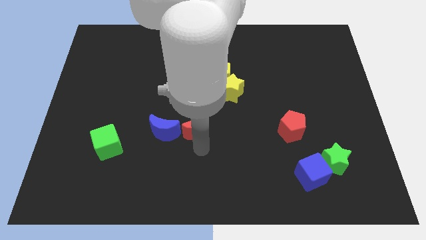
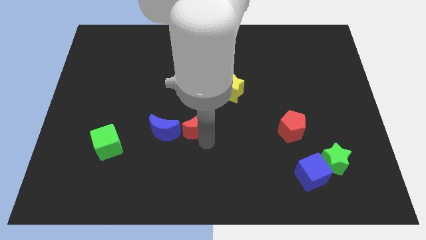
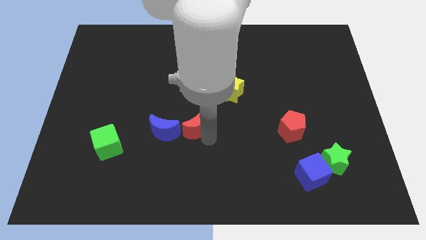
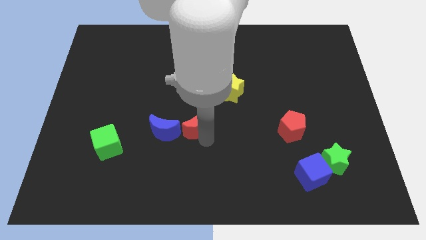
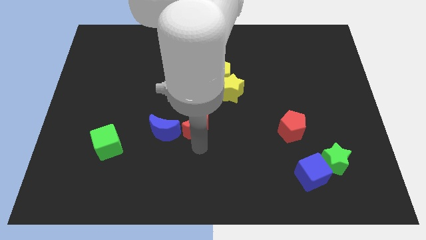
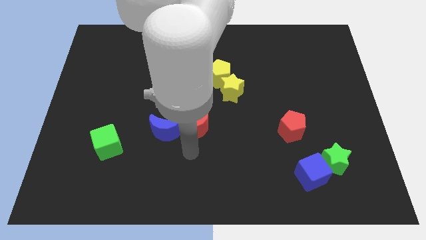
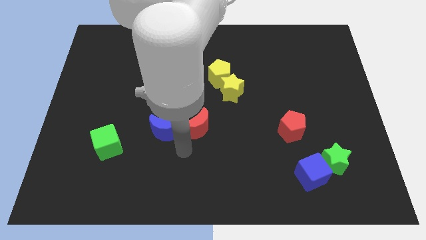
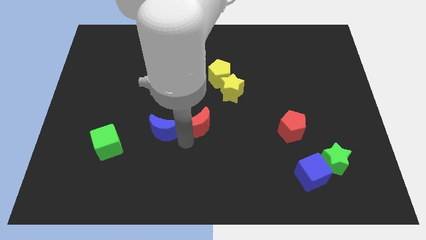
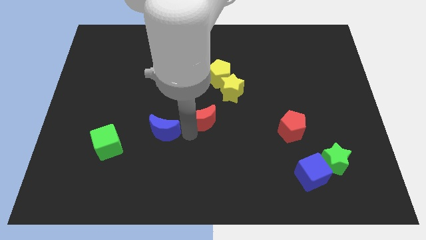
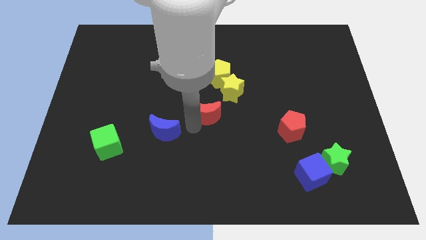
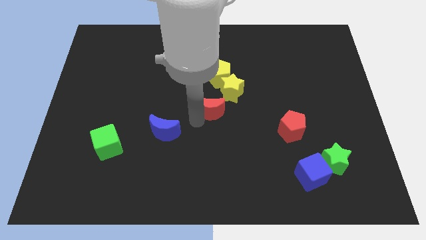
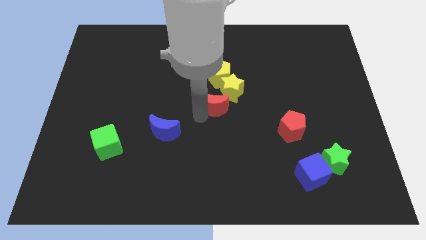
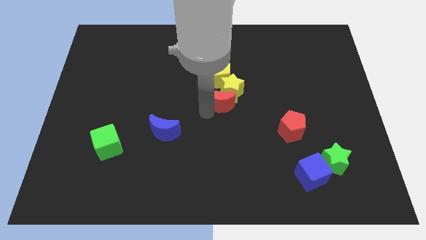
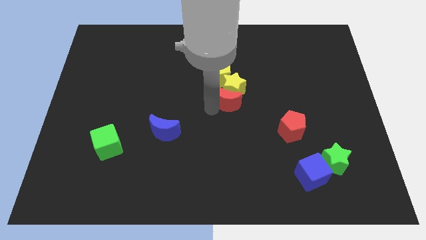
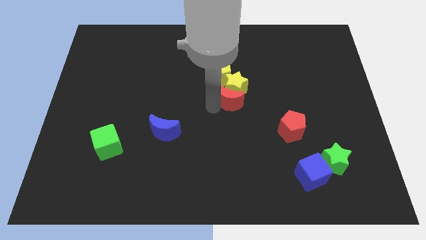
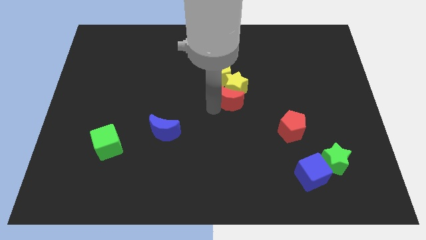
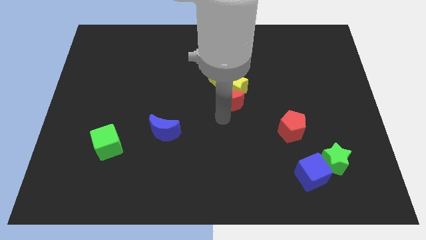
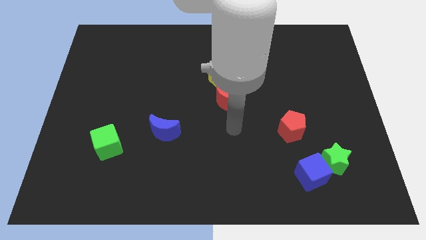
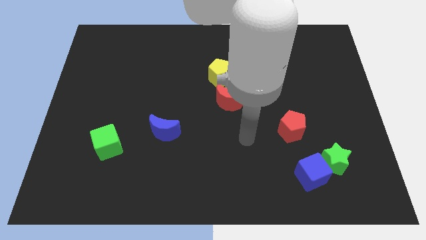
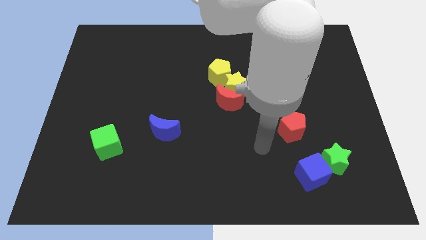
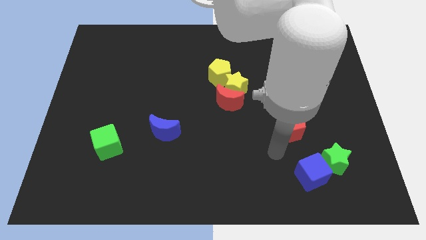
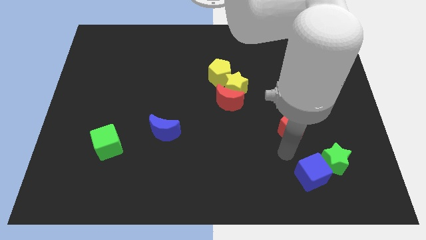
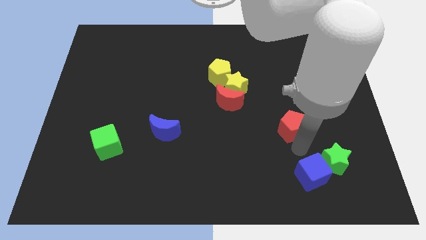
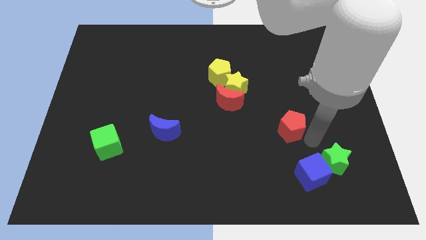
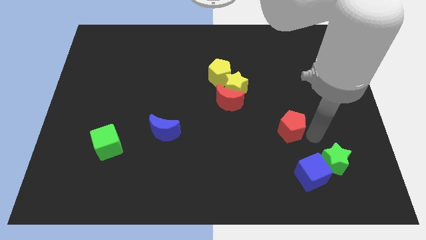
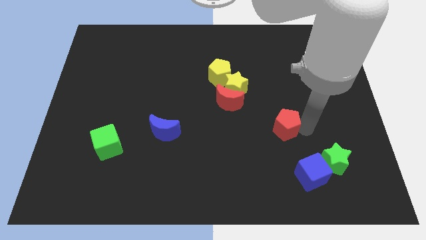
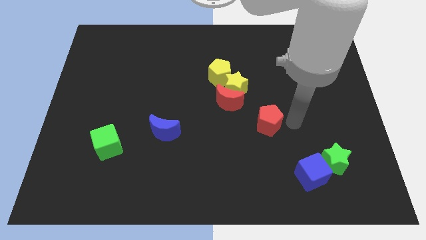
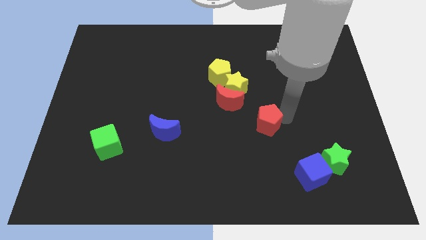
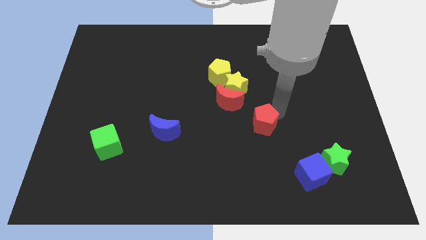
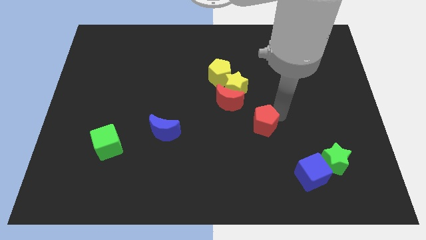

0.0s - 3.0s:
separate blue moon and red moon

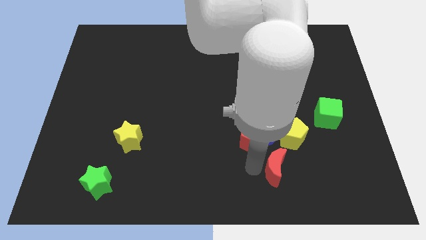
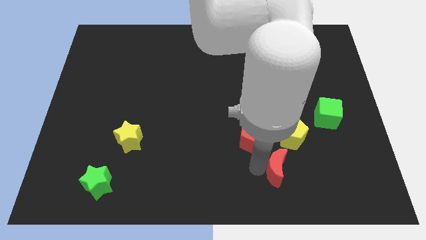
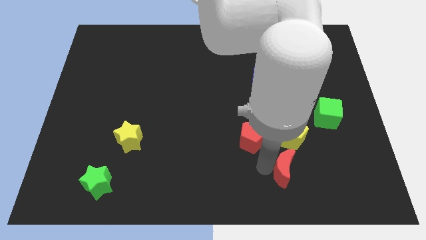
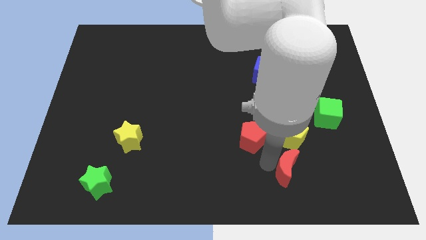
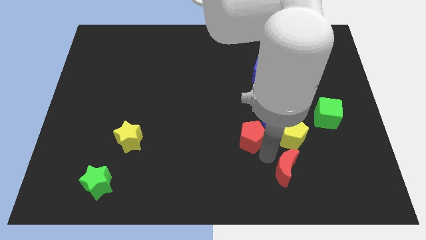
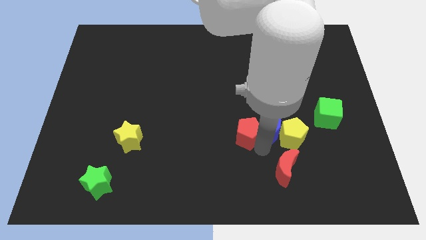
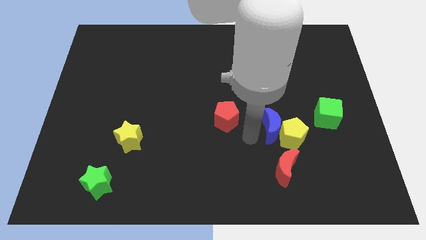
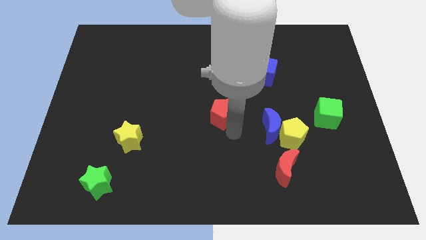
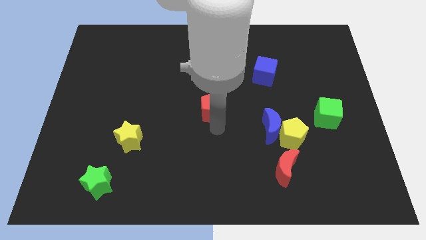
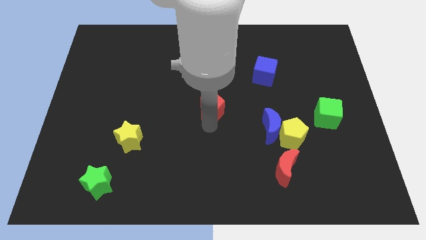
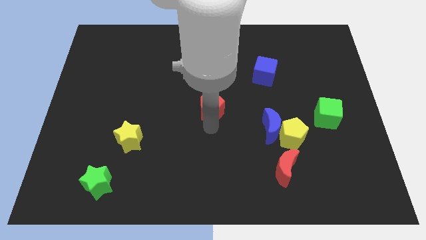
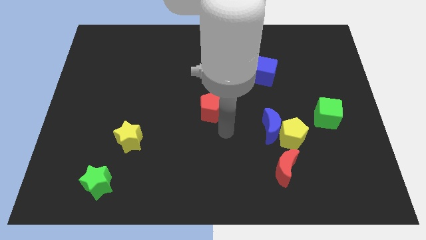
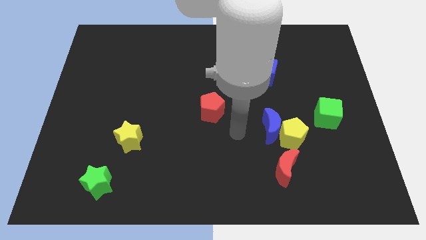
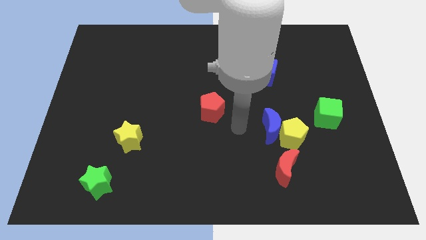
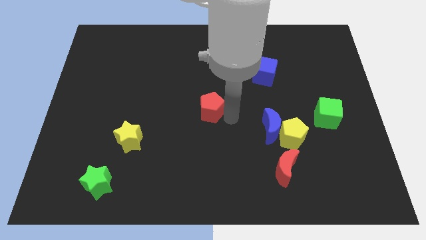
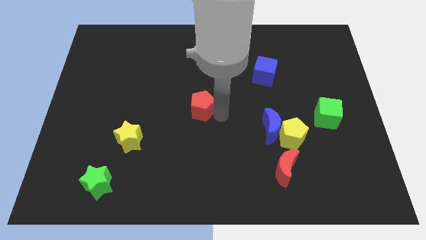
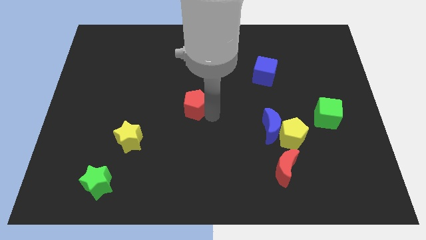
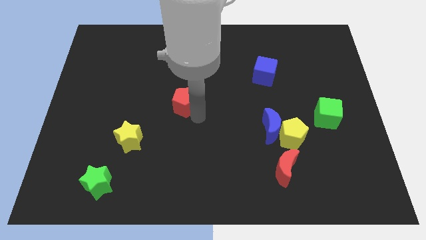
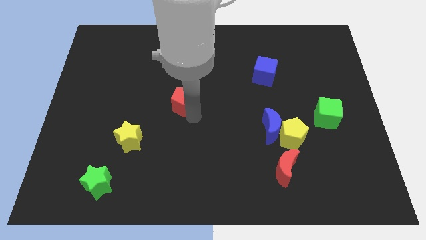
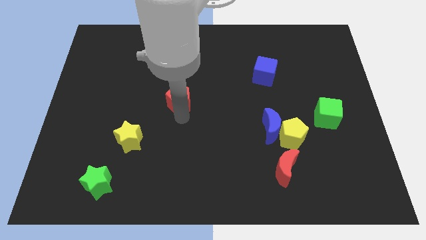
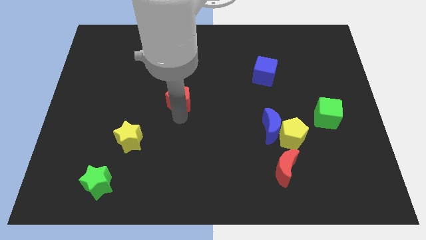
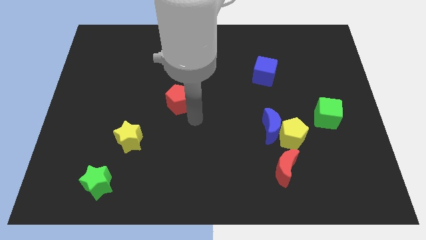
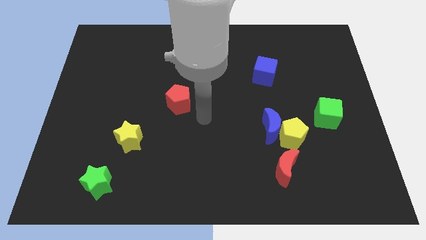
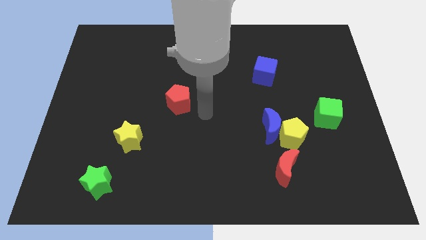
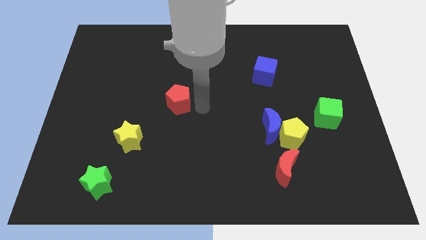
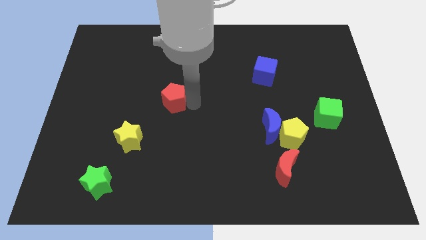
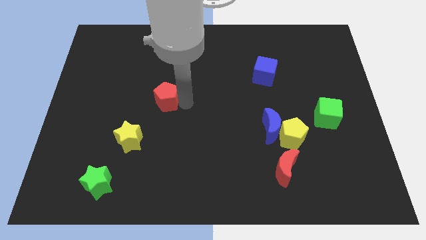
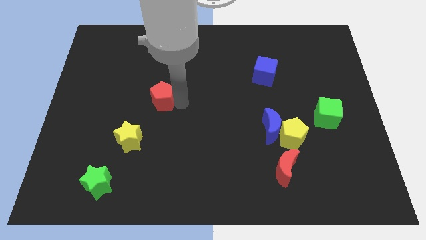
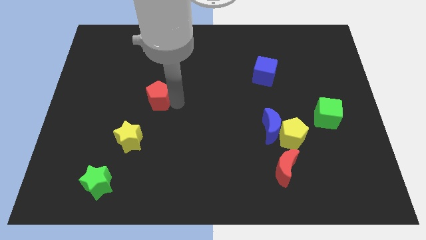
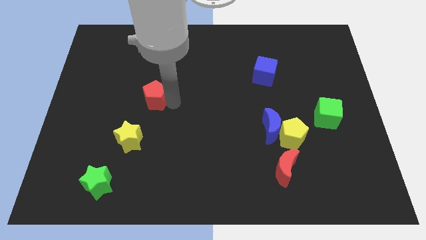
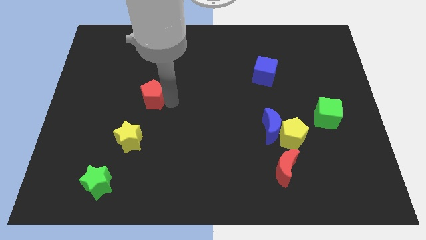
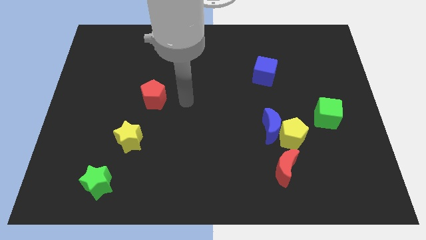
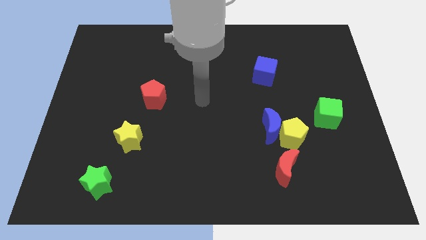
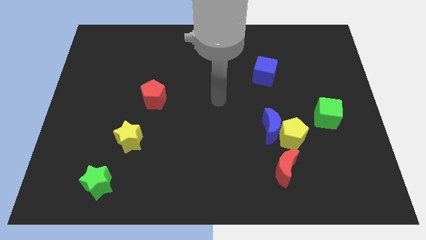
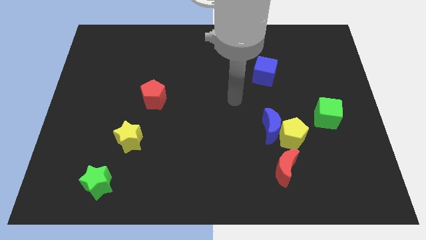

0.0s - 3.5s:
move the red pentagon diagonally to the right of the yellow star

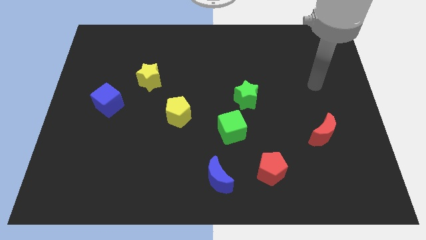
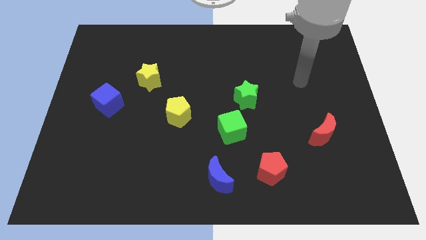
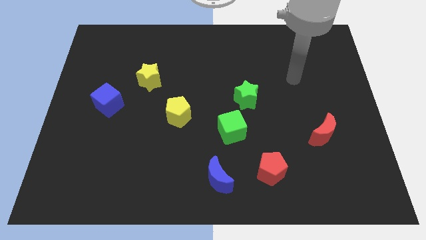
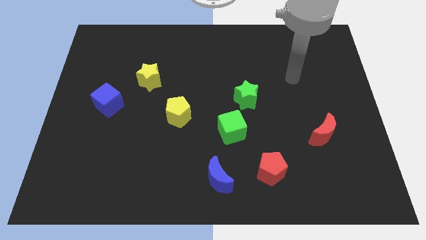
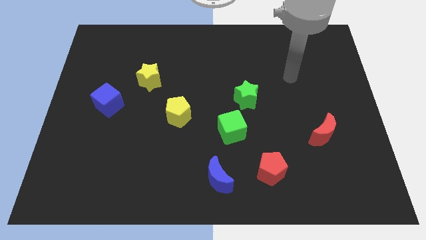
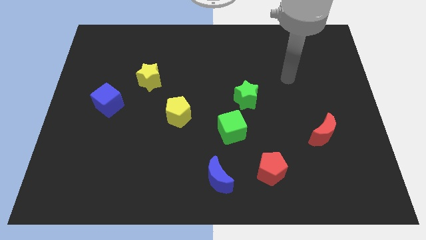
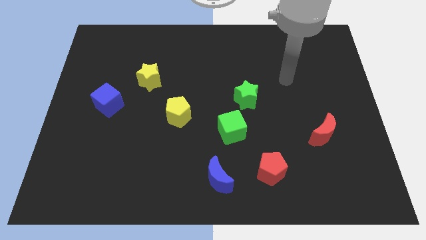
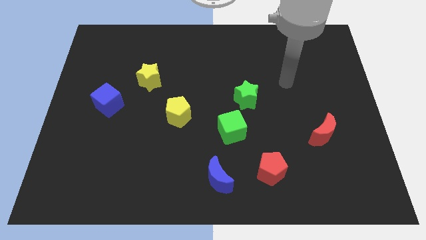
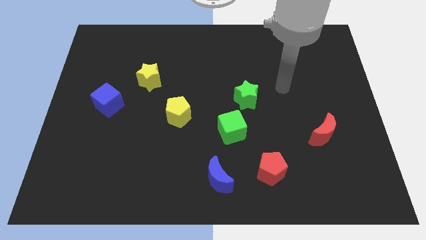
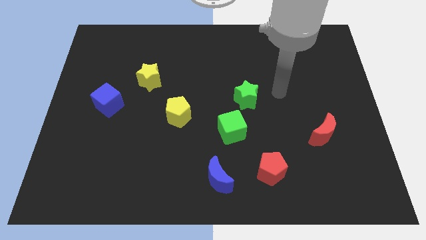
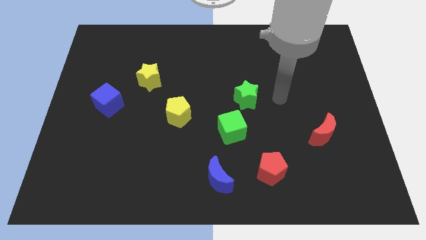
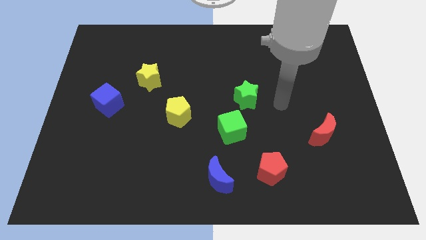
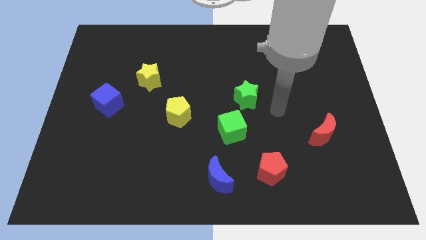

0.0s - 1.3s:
place arm on right side of green star

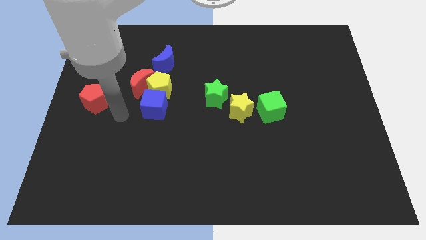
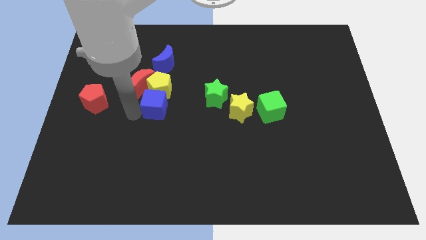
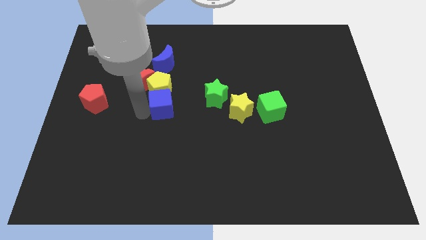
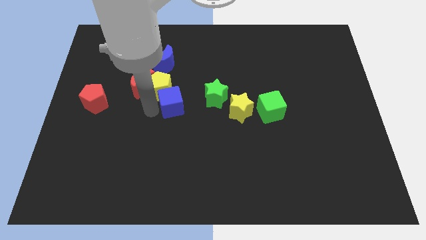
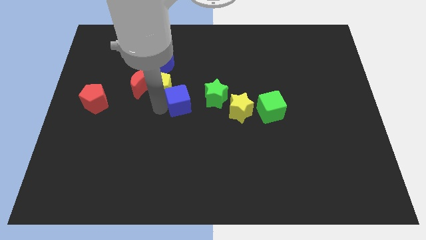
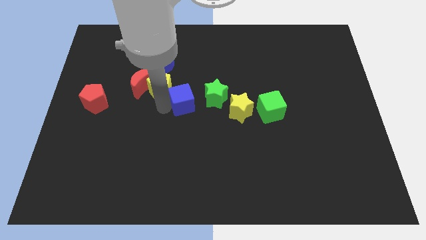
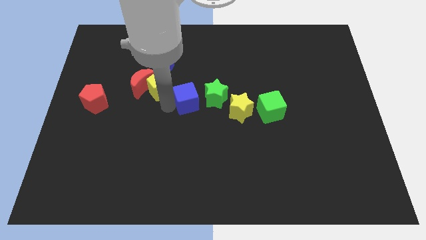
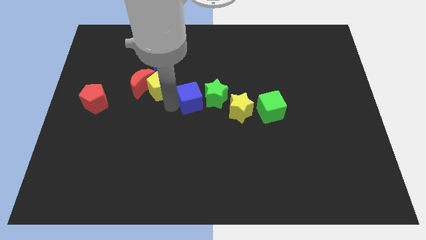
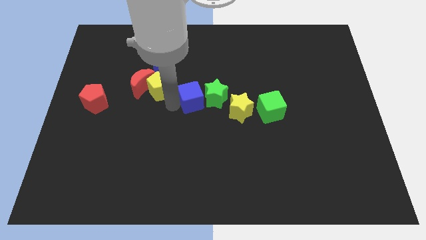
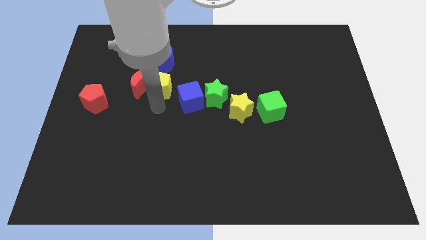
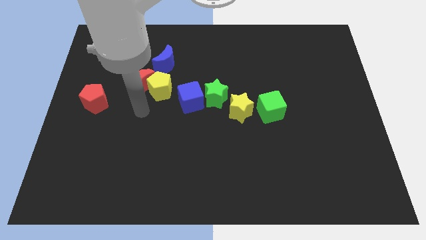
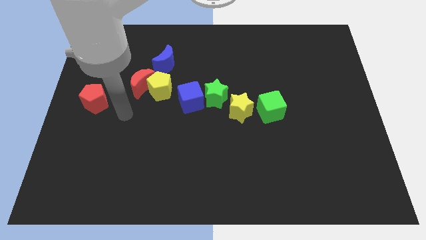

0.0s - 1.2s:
push blue cube into green star

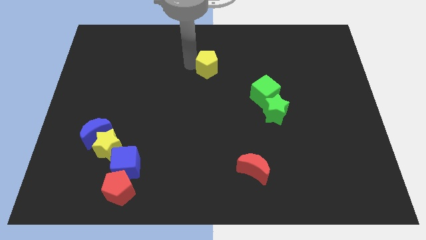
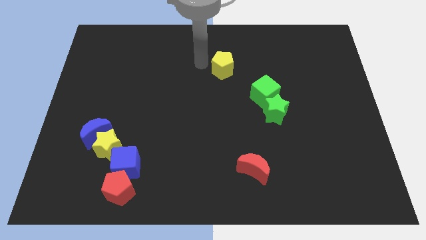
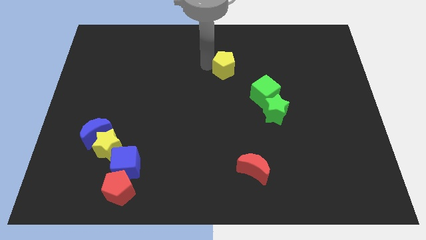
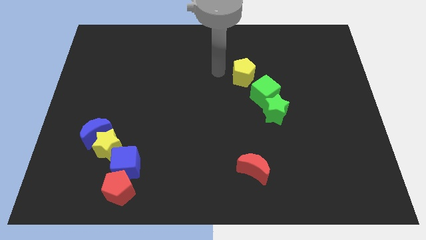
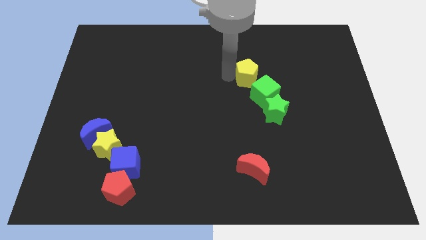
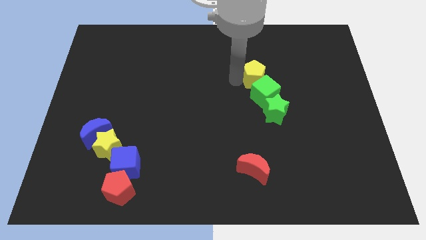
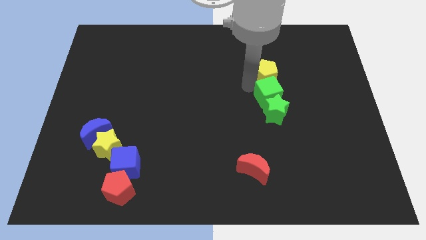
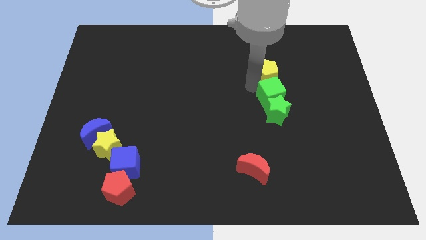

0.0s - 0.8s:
push the yellow pentagon to the top of the green cube
